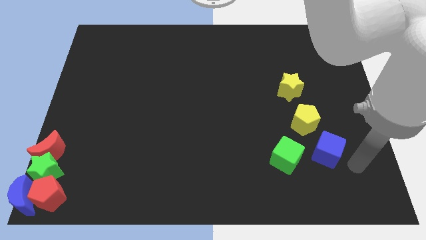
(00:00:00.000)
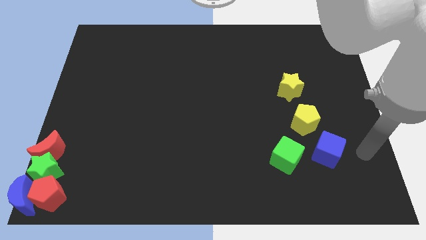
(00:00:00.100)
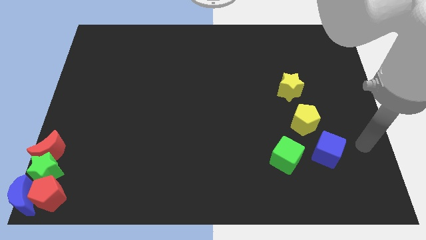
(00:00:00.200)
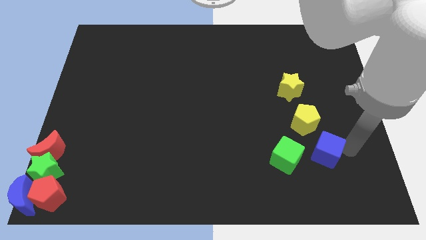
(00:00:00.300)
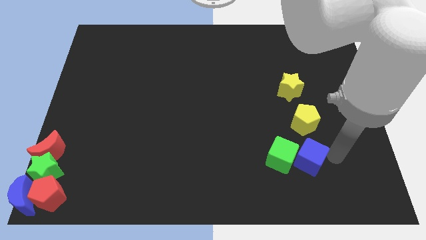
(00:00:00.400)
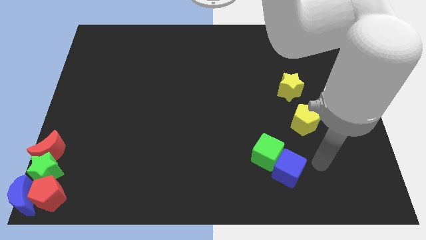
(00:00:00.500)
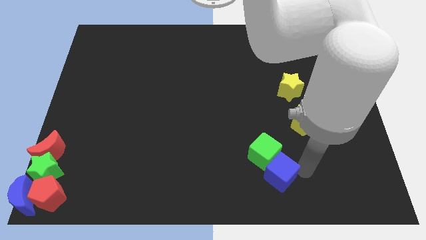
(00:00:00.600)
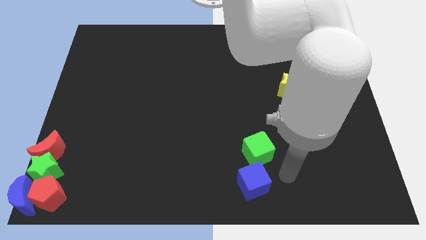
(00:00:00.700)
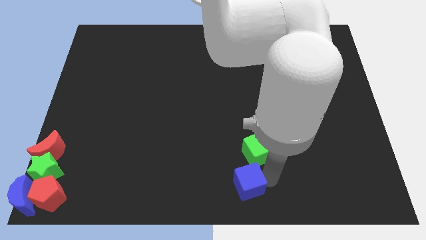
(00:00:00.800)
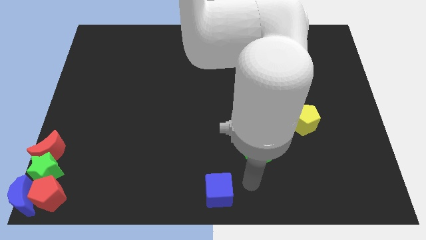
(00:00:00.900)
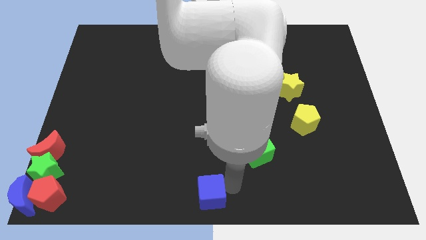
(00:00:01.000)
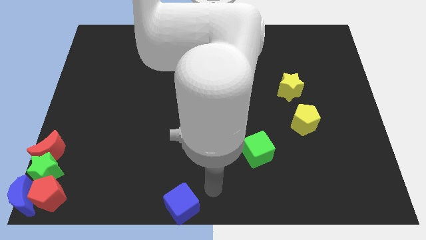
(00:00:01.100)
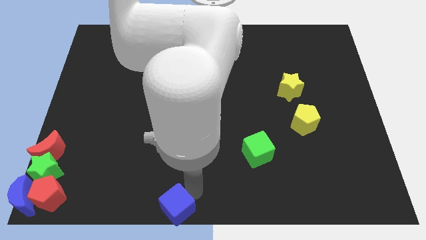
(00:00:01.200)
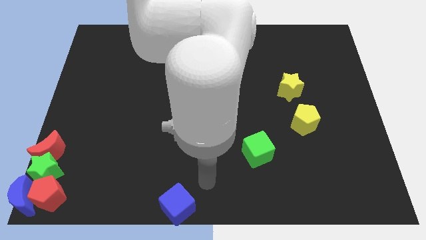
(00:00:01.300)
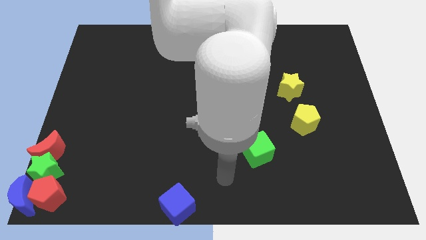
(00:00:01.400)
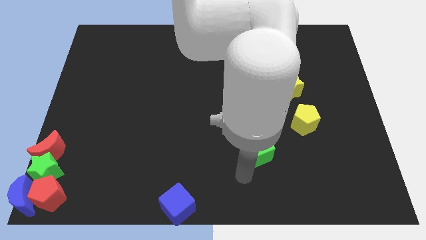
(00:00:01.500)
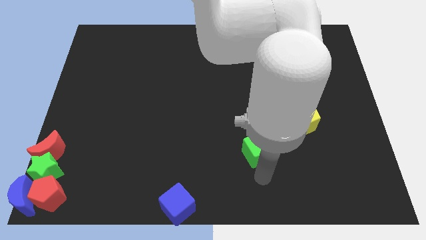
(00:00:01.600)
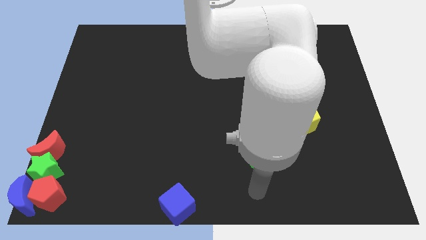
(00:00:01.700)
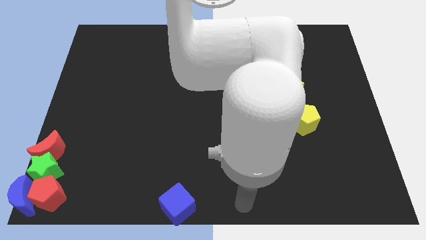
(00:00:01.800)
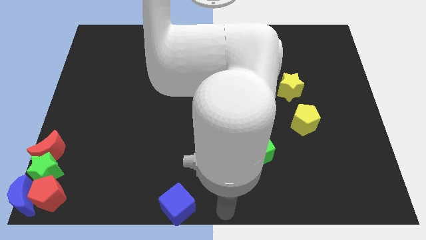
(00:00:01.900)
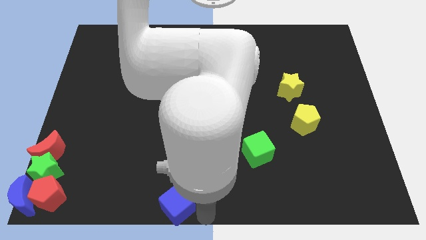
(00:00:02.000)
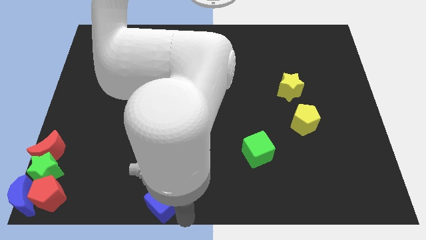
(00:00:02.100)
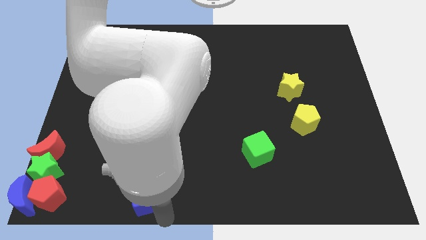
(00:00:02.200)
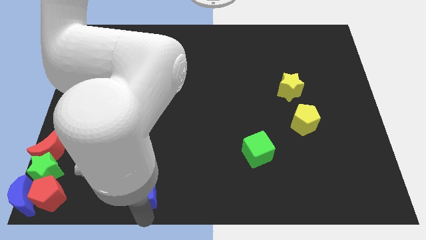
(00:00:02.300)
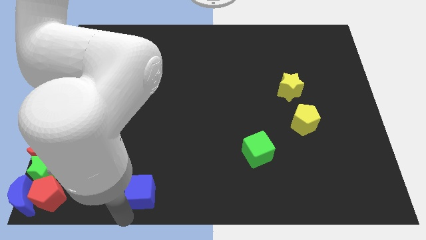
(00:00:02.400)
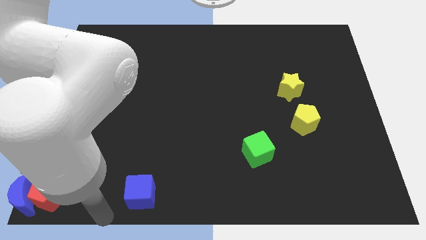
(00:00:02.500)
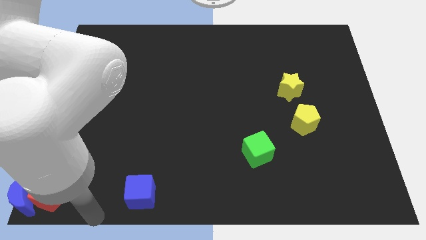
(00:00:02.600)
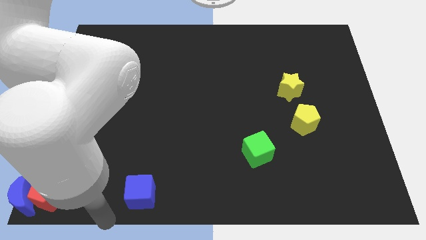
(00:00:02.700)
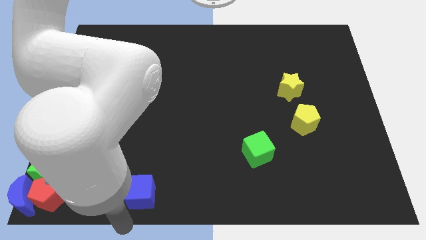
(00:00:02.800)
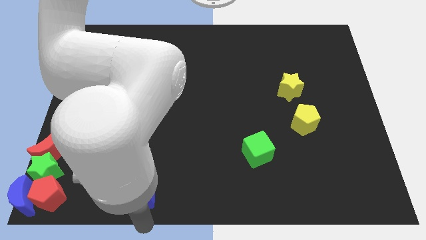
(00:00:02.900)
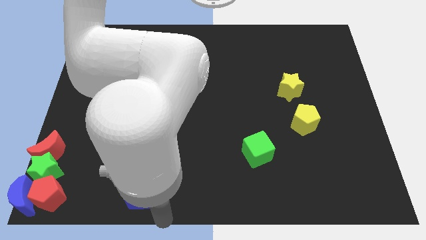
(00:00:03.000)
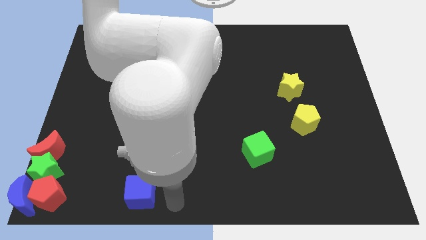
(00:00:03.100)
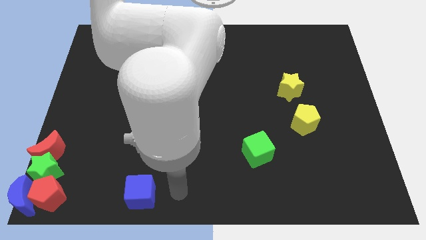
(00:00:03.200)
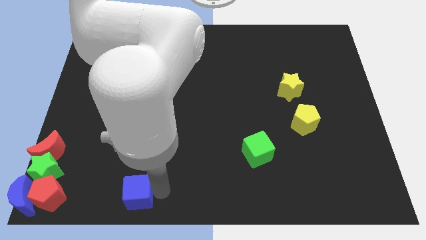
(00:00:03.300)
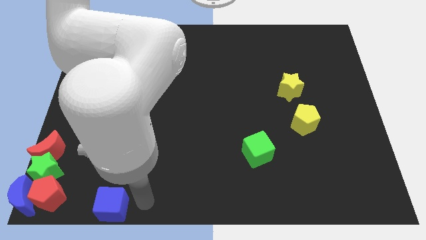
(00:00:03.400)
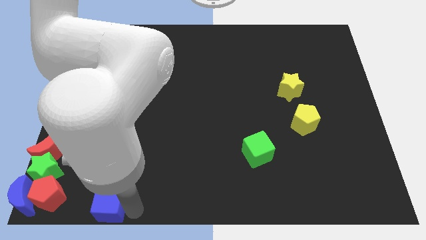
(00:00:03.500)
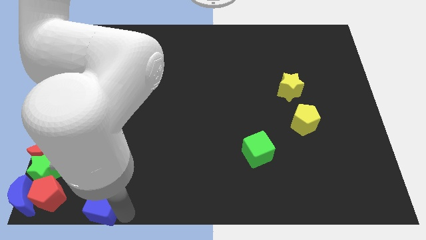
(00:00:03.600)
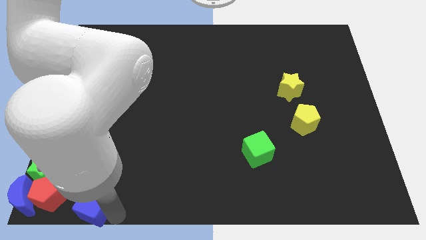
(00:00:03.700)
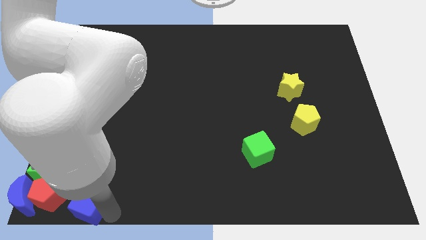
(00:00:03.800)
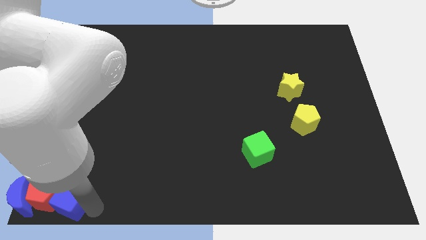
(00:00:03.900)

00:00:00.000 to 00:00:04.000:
place the blue cube into the red pentagon

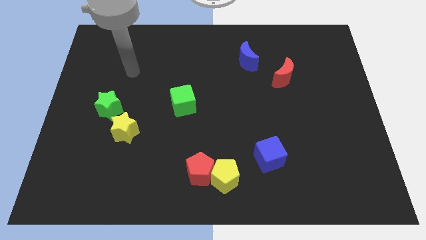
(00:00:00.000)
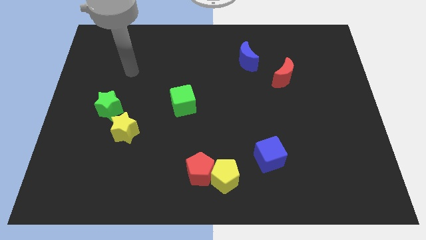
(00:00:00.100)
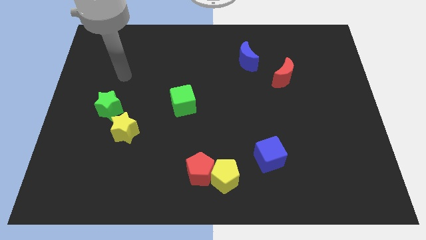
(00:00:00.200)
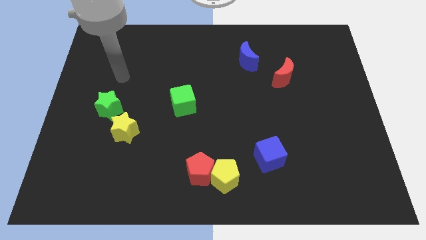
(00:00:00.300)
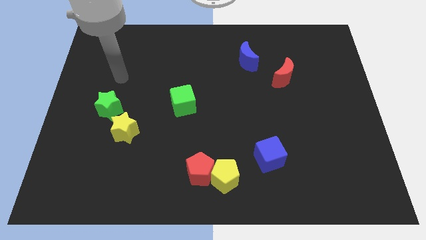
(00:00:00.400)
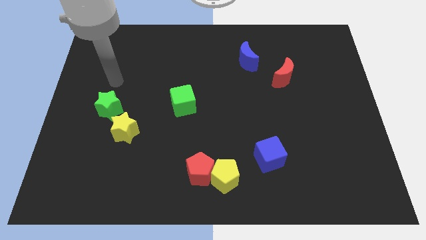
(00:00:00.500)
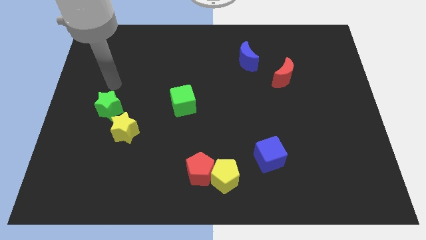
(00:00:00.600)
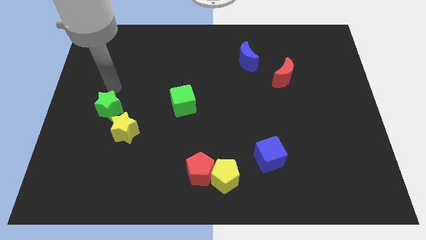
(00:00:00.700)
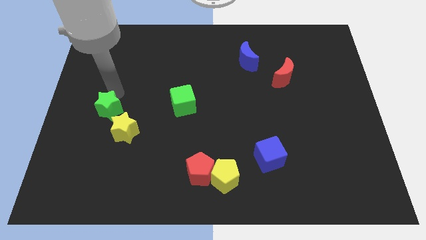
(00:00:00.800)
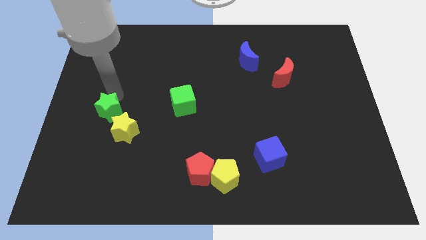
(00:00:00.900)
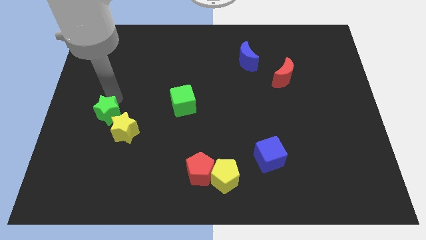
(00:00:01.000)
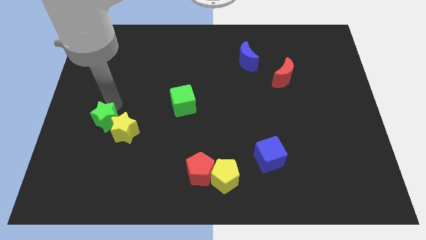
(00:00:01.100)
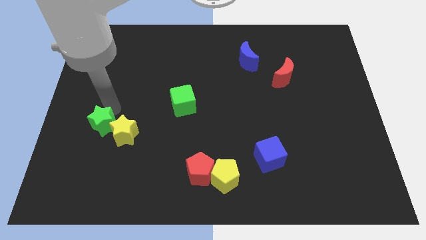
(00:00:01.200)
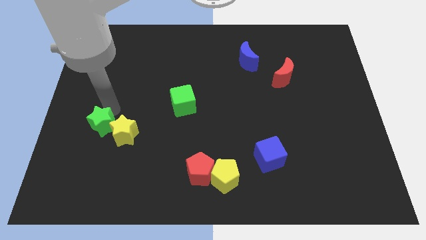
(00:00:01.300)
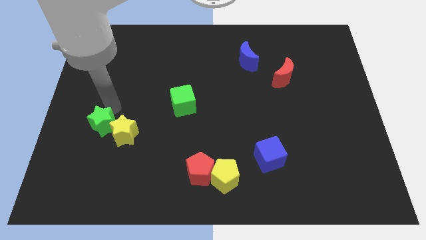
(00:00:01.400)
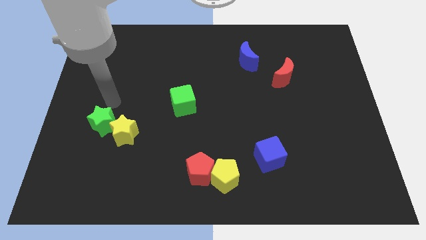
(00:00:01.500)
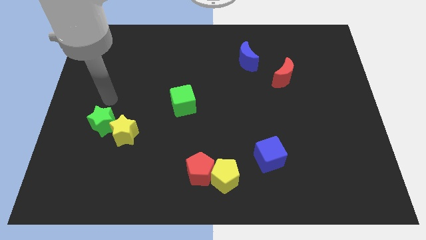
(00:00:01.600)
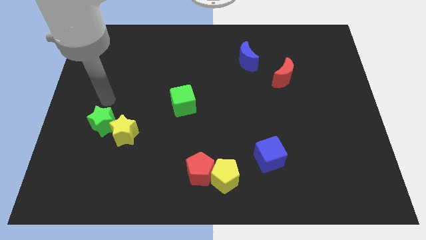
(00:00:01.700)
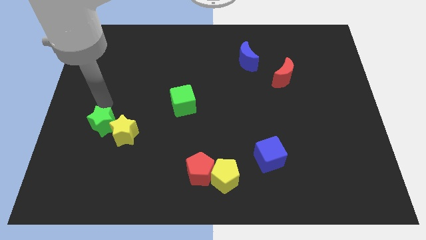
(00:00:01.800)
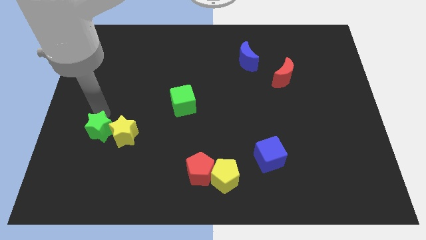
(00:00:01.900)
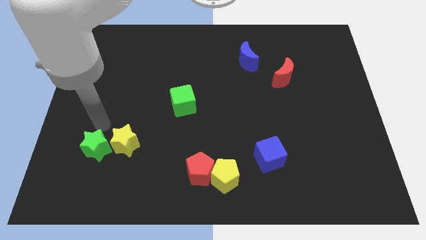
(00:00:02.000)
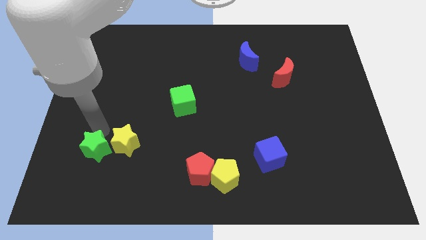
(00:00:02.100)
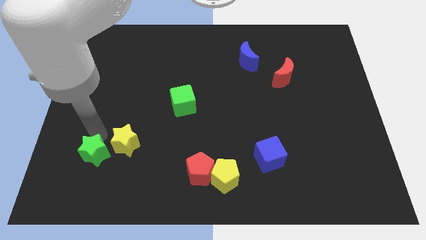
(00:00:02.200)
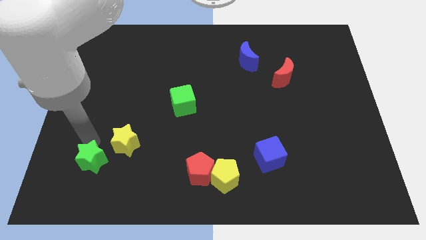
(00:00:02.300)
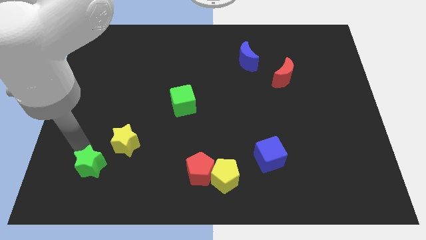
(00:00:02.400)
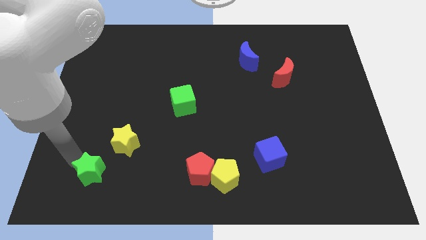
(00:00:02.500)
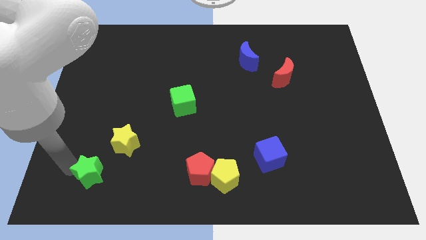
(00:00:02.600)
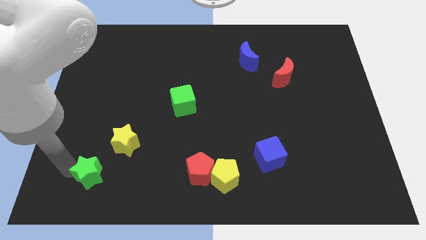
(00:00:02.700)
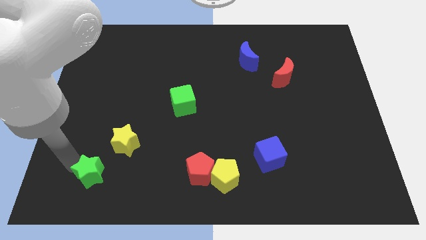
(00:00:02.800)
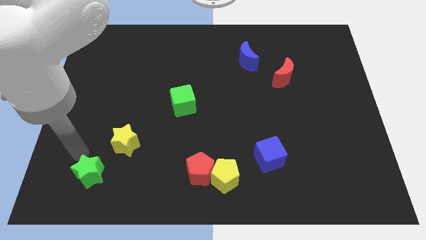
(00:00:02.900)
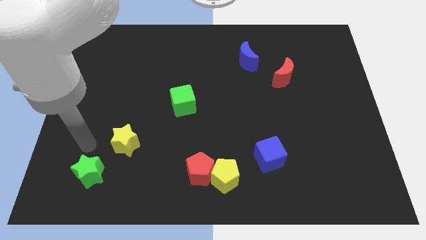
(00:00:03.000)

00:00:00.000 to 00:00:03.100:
push the green star away from the yellow star

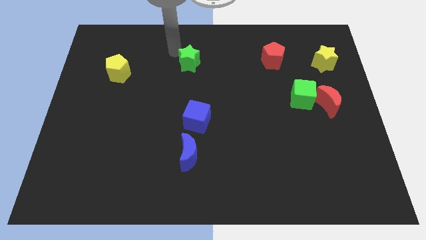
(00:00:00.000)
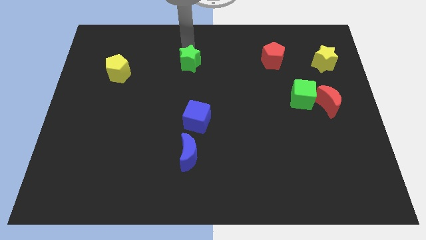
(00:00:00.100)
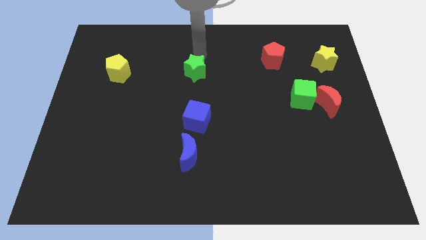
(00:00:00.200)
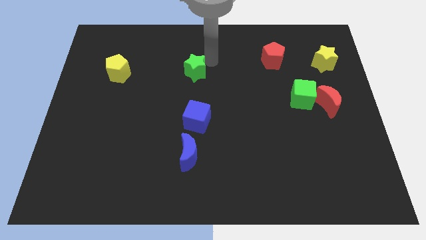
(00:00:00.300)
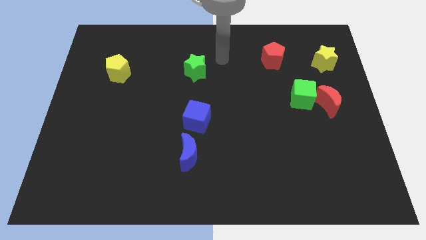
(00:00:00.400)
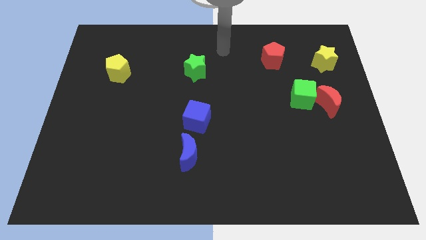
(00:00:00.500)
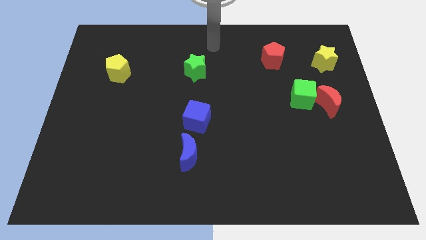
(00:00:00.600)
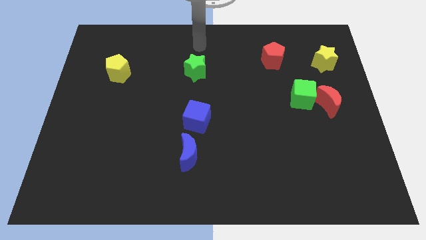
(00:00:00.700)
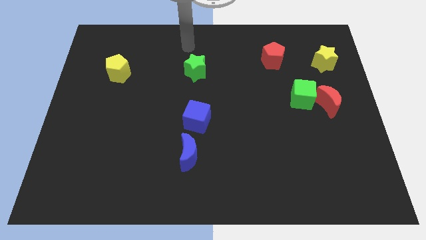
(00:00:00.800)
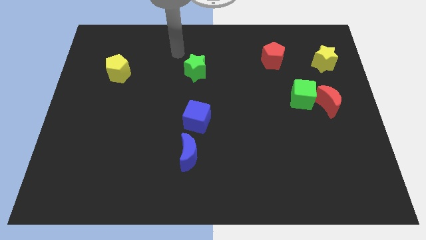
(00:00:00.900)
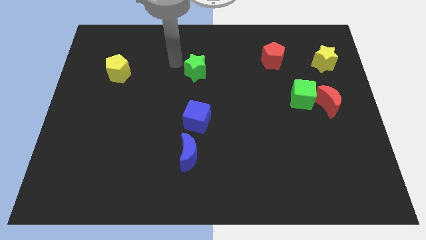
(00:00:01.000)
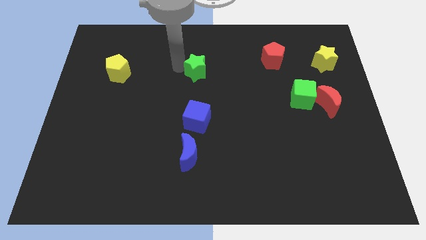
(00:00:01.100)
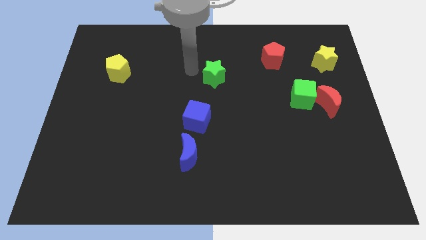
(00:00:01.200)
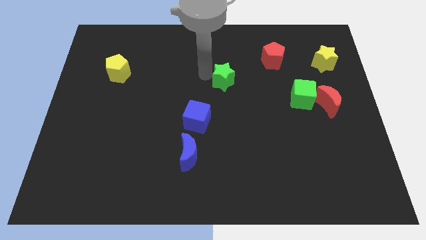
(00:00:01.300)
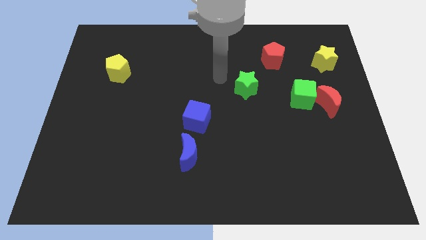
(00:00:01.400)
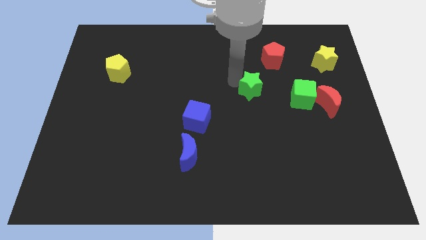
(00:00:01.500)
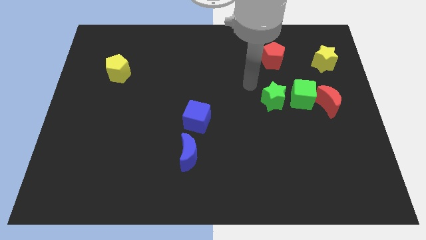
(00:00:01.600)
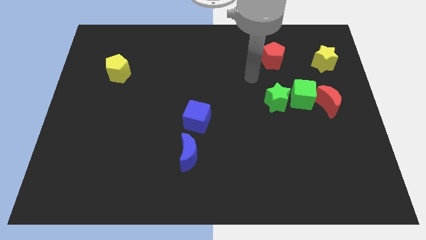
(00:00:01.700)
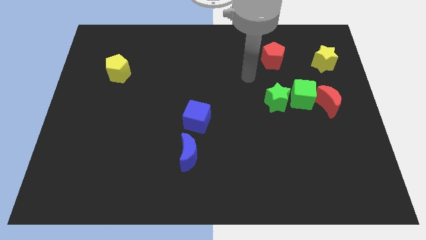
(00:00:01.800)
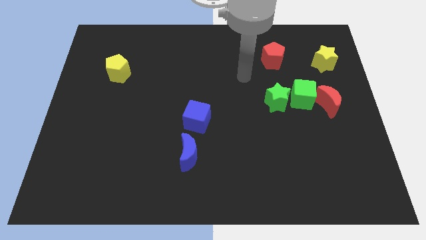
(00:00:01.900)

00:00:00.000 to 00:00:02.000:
move the green star close to green cube
